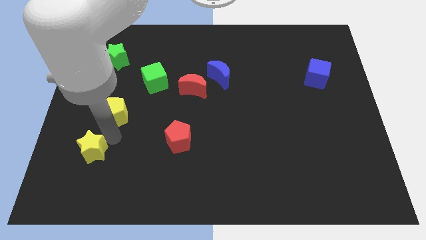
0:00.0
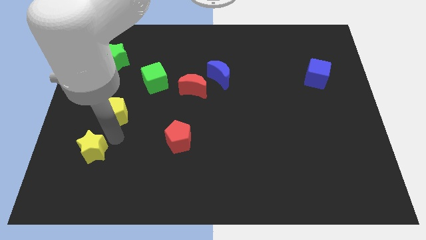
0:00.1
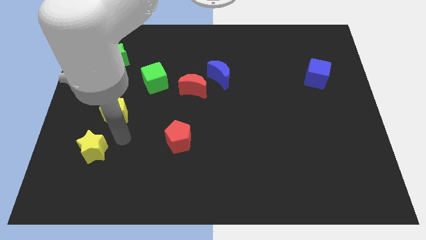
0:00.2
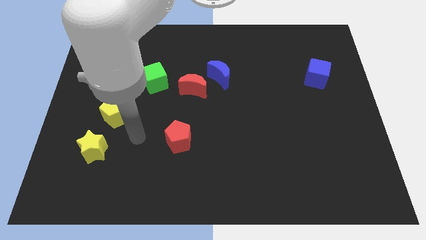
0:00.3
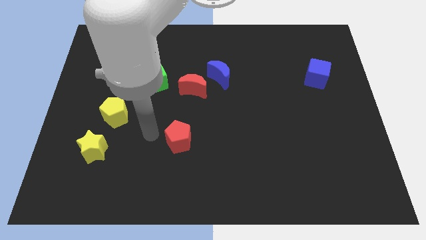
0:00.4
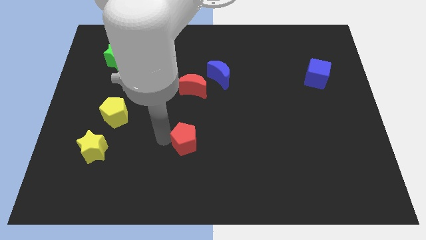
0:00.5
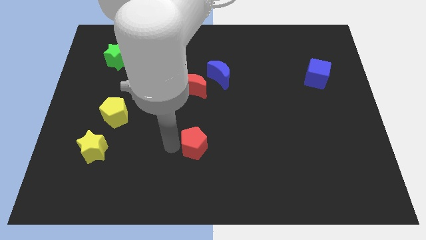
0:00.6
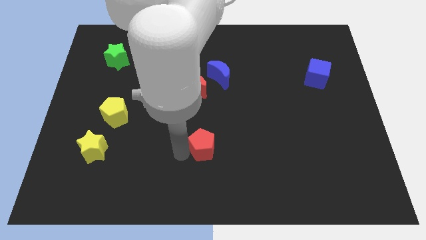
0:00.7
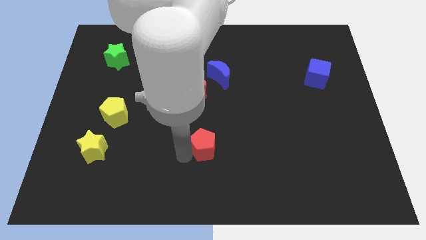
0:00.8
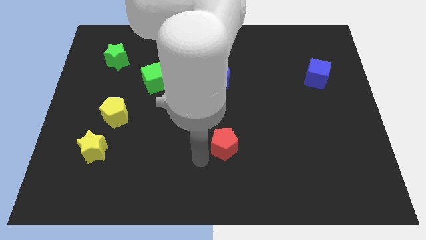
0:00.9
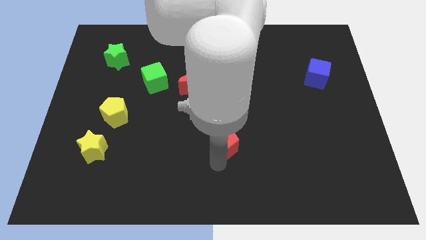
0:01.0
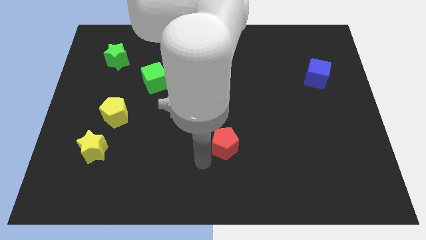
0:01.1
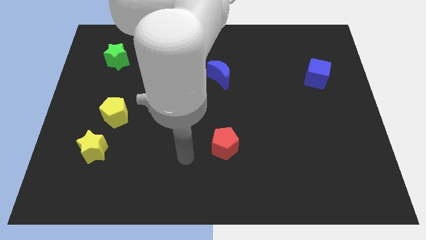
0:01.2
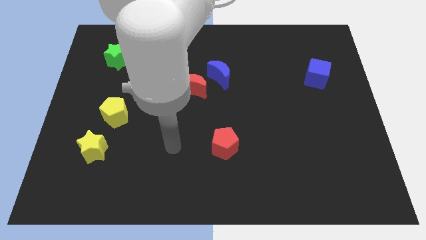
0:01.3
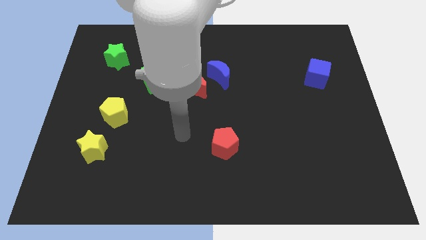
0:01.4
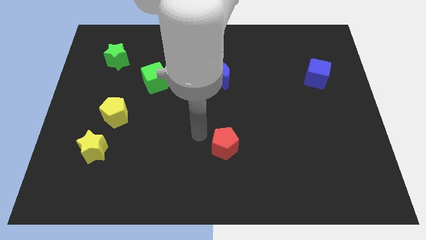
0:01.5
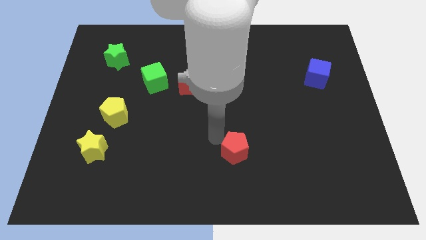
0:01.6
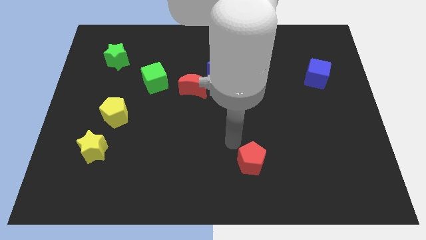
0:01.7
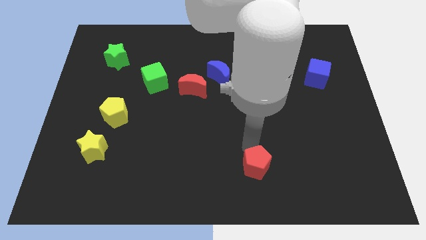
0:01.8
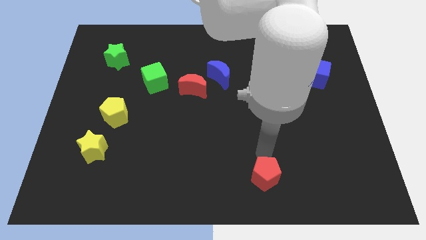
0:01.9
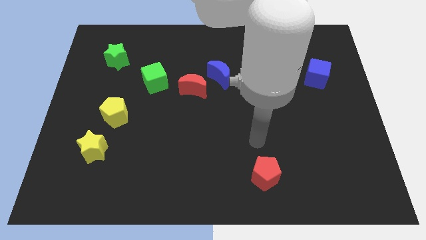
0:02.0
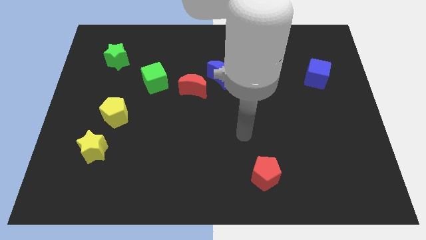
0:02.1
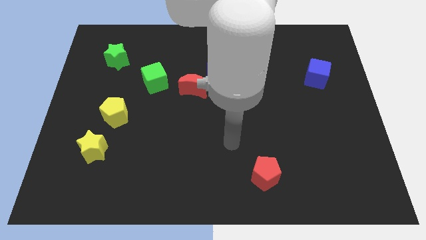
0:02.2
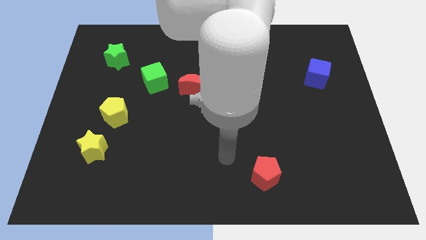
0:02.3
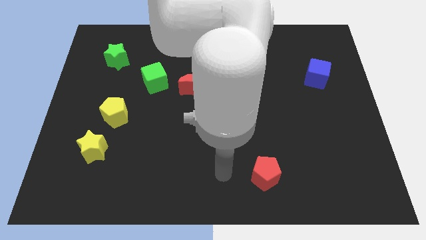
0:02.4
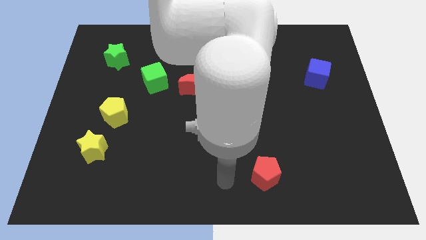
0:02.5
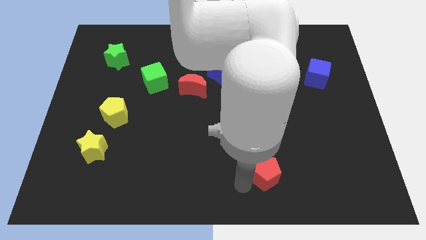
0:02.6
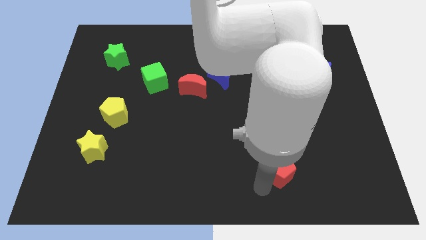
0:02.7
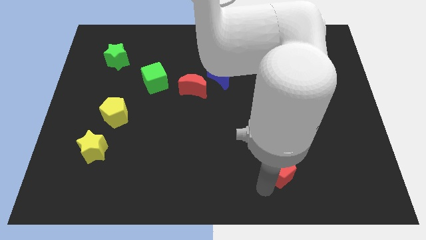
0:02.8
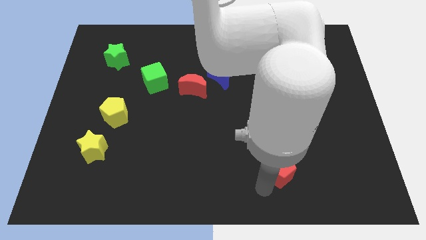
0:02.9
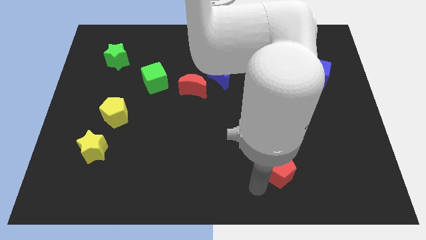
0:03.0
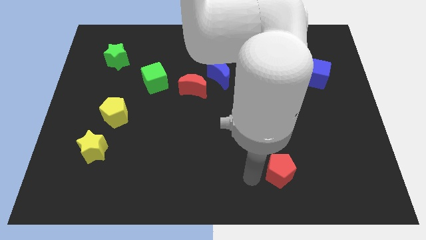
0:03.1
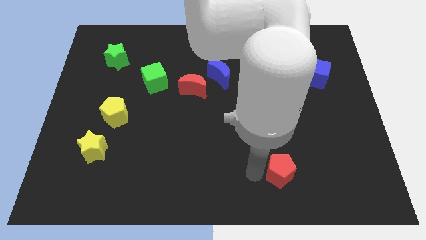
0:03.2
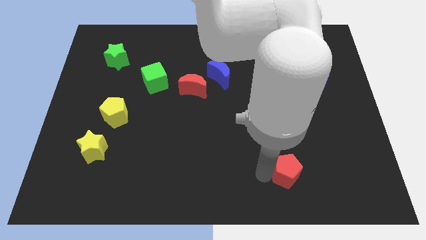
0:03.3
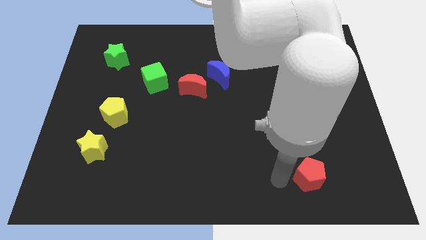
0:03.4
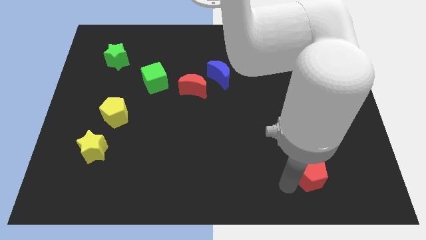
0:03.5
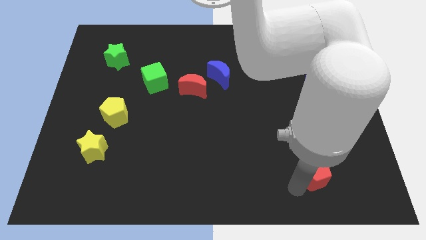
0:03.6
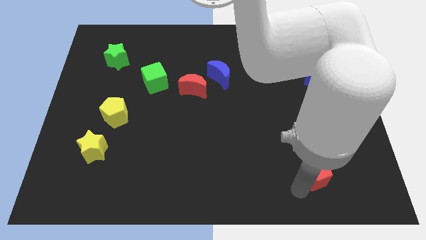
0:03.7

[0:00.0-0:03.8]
push the red pentagon to the bottom right corner of the board

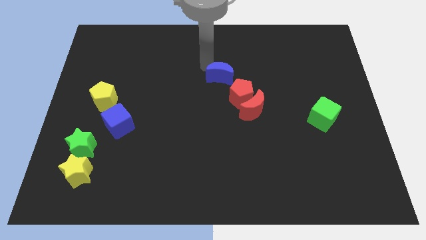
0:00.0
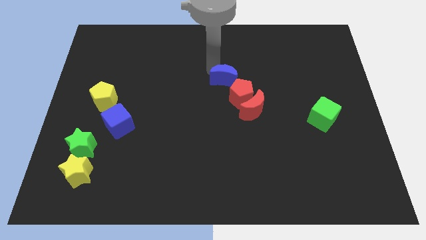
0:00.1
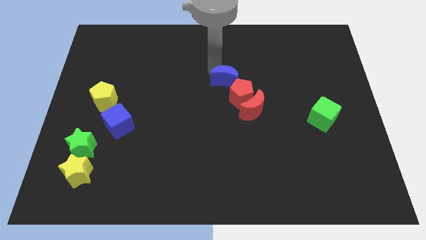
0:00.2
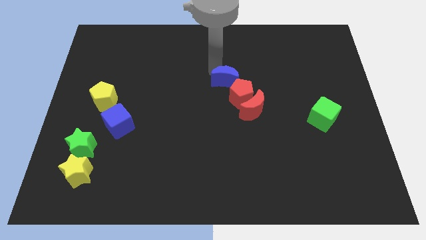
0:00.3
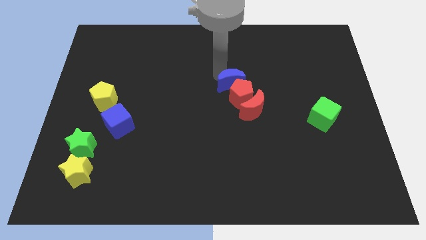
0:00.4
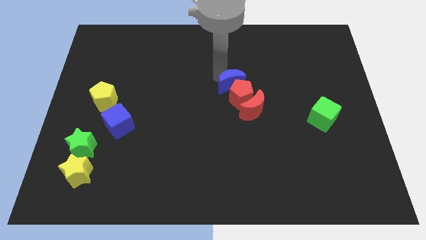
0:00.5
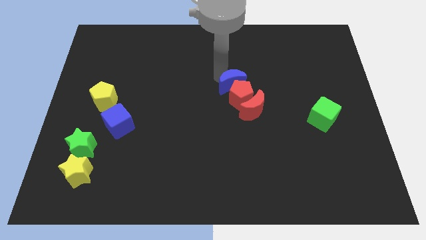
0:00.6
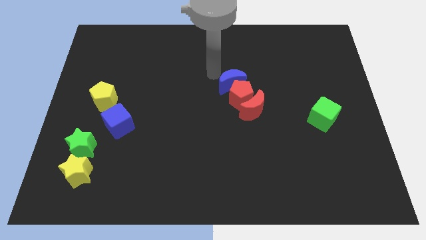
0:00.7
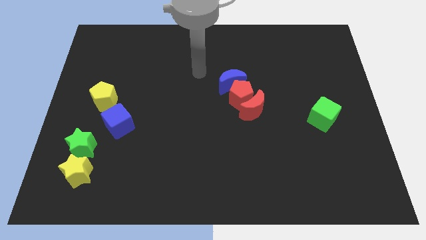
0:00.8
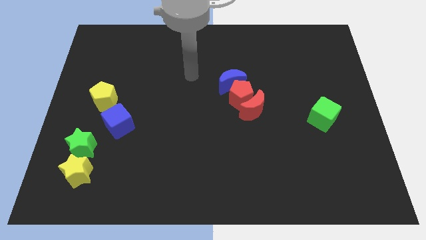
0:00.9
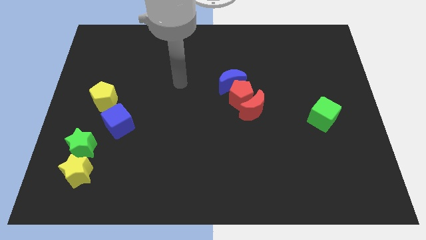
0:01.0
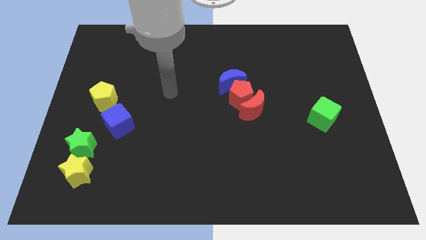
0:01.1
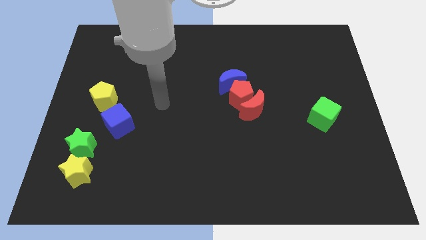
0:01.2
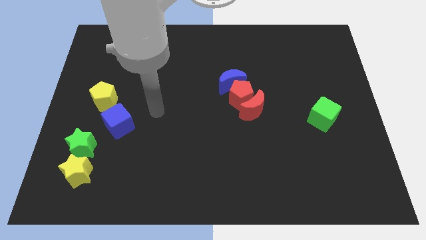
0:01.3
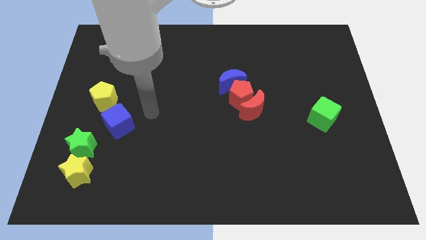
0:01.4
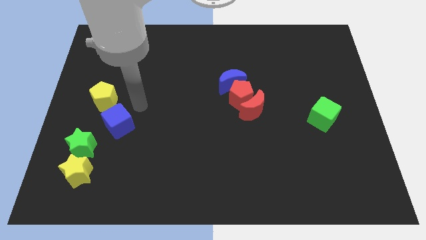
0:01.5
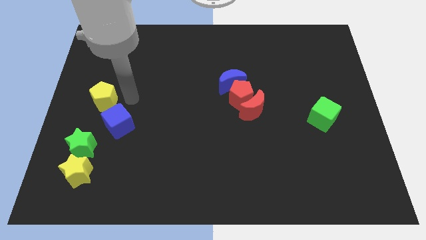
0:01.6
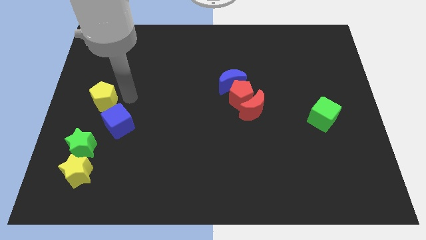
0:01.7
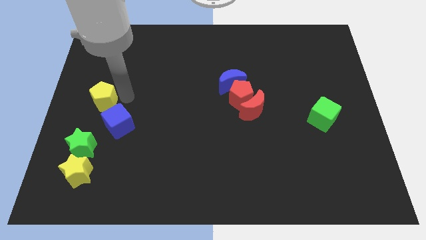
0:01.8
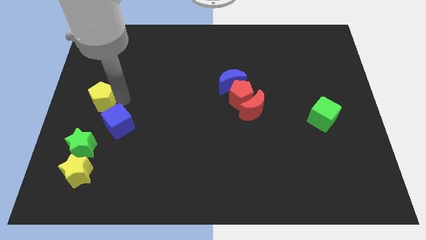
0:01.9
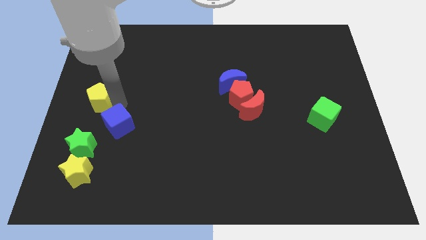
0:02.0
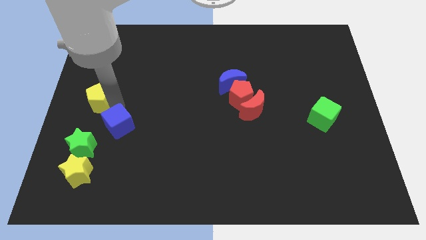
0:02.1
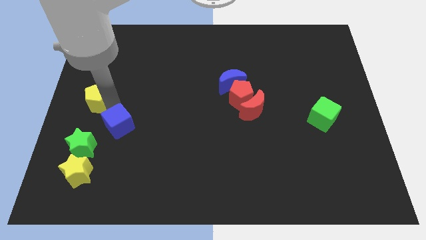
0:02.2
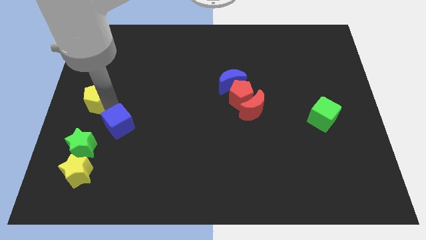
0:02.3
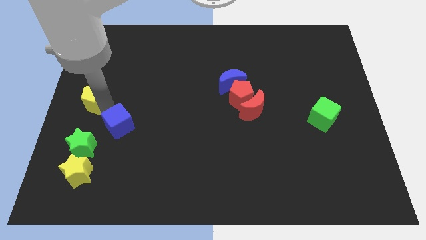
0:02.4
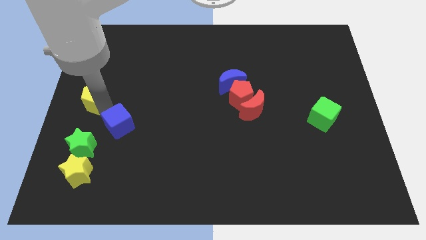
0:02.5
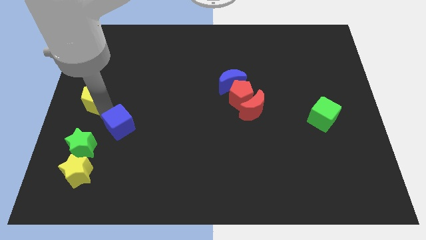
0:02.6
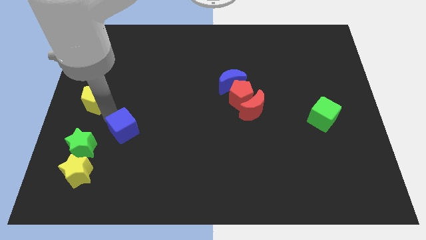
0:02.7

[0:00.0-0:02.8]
place your arm in between the yellow pentagon and blue cube

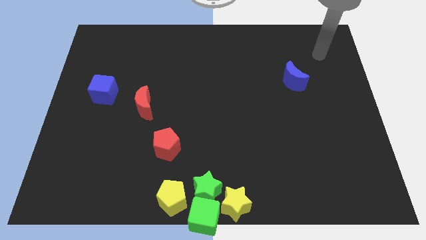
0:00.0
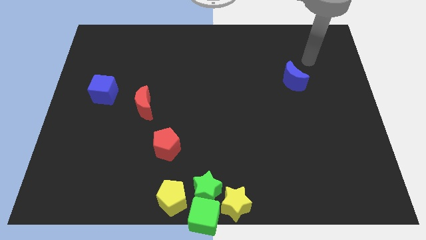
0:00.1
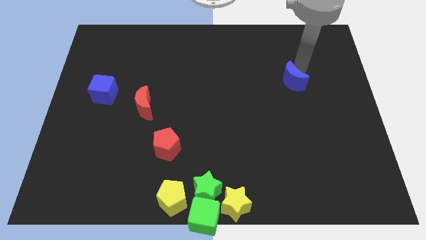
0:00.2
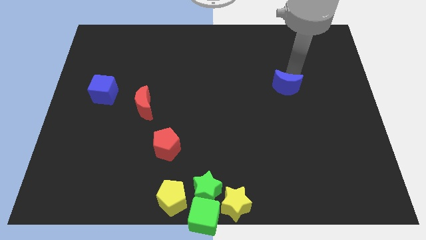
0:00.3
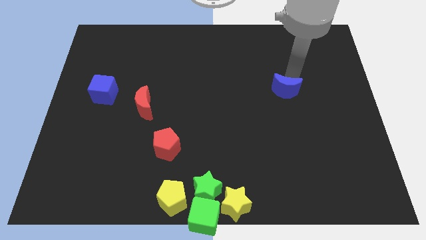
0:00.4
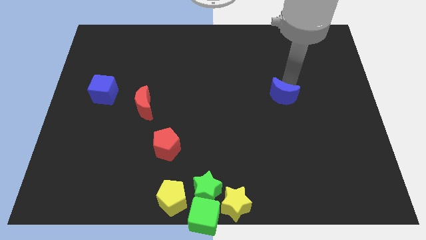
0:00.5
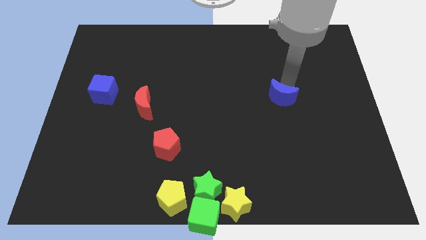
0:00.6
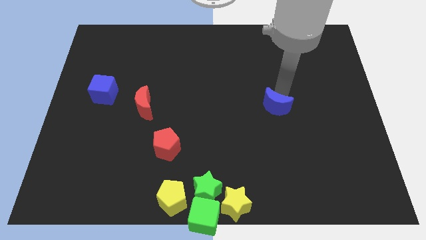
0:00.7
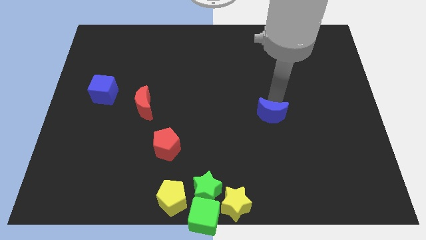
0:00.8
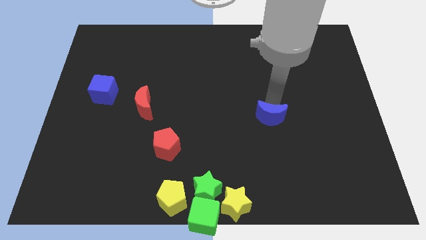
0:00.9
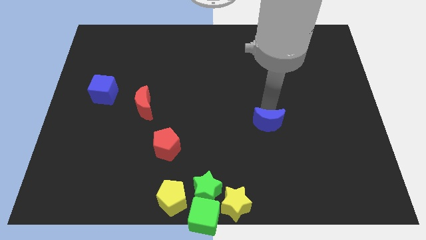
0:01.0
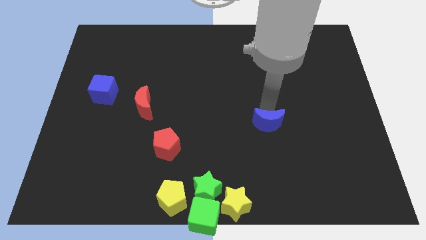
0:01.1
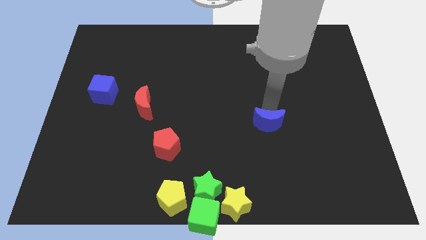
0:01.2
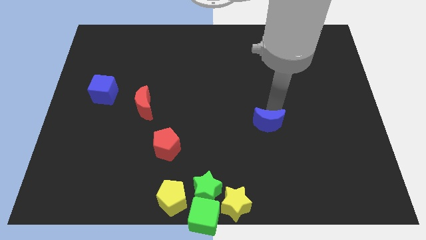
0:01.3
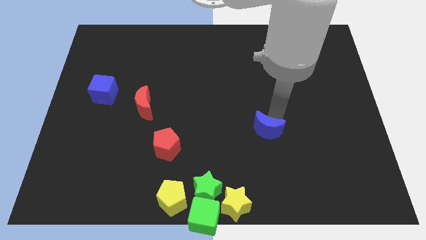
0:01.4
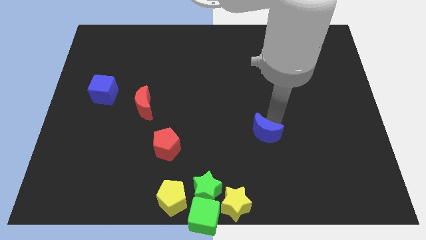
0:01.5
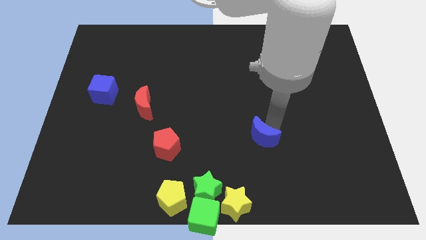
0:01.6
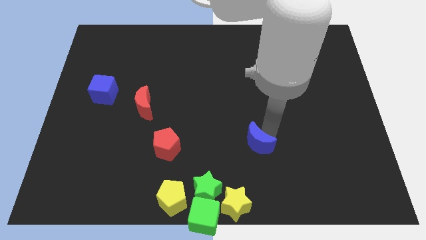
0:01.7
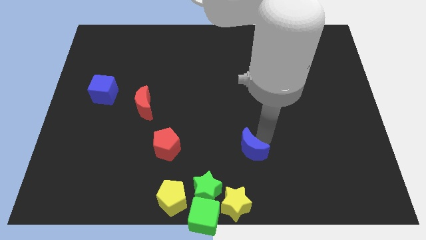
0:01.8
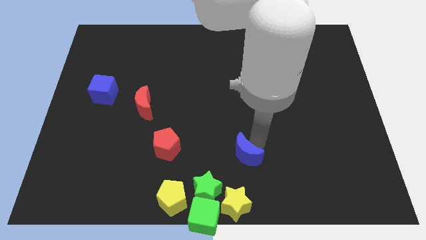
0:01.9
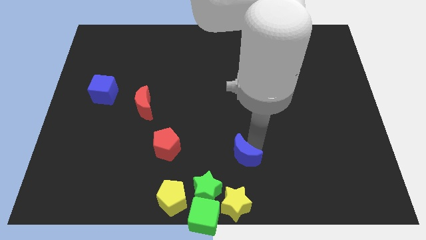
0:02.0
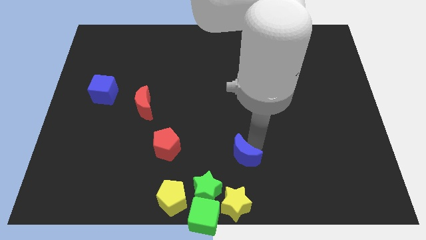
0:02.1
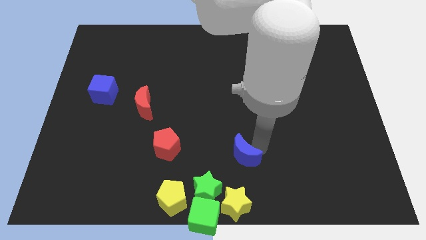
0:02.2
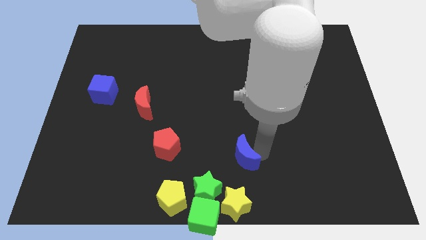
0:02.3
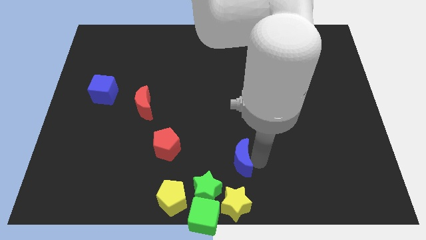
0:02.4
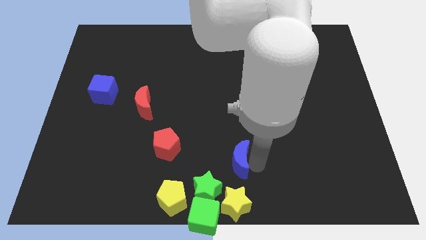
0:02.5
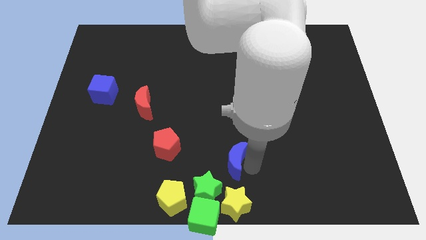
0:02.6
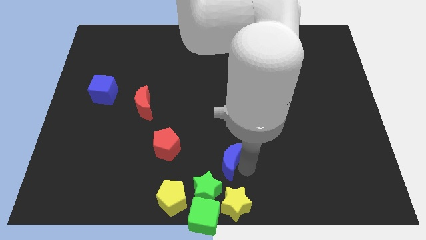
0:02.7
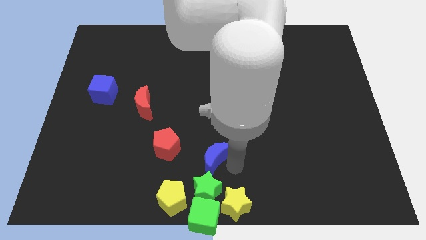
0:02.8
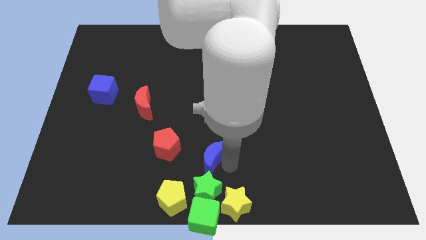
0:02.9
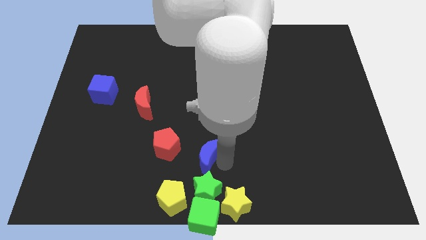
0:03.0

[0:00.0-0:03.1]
push the blue moon above the green star
